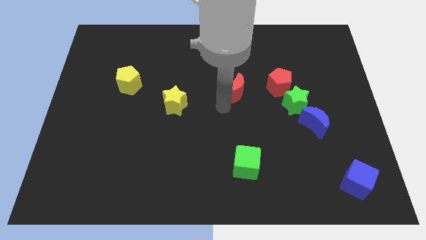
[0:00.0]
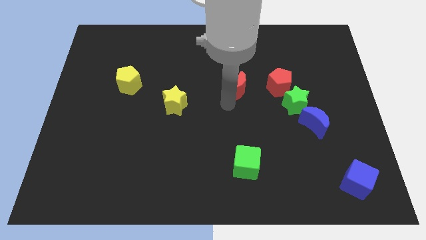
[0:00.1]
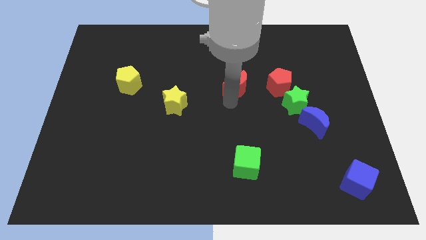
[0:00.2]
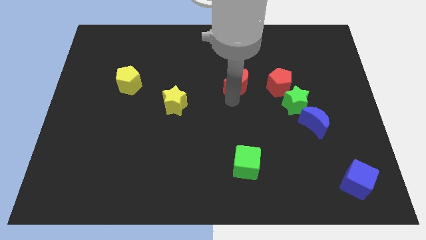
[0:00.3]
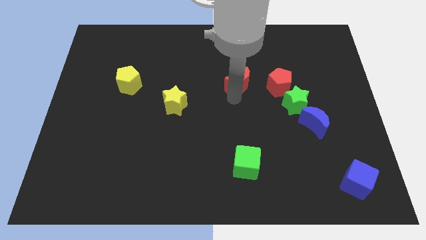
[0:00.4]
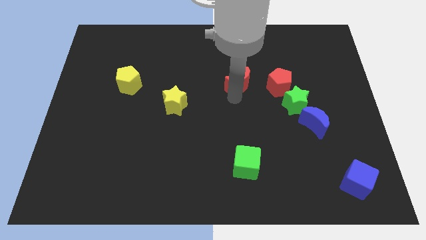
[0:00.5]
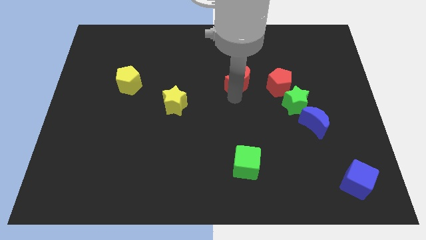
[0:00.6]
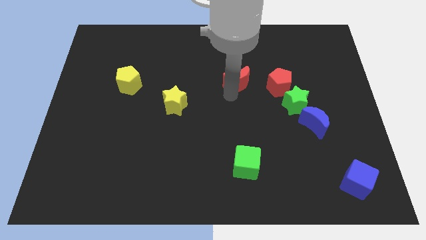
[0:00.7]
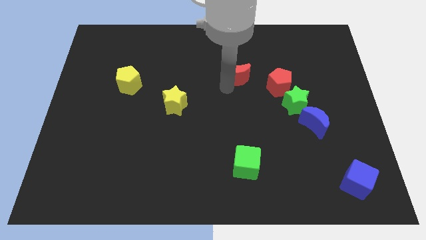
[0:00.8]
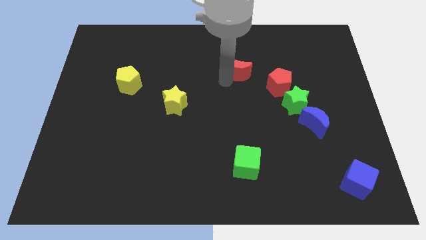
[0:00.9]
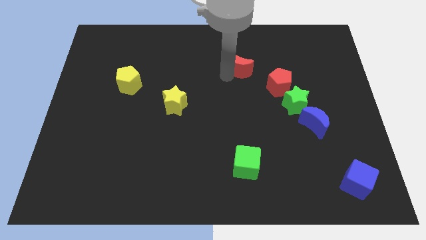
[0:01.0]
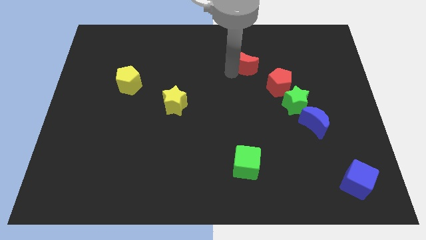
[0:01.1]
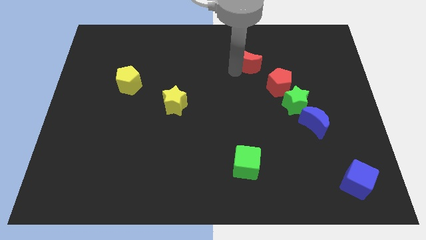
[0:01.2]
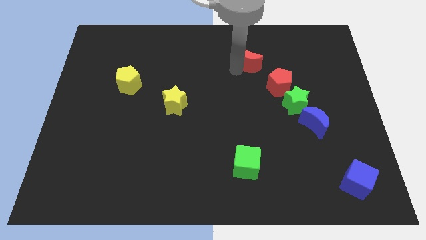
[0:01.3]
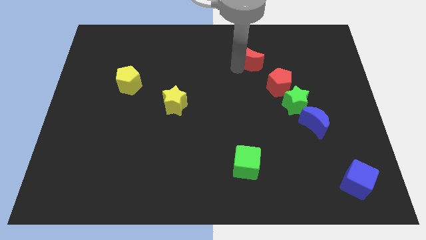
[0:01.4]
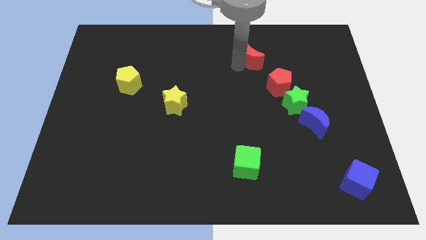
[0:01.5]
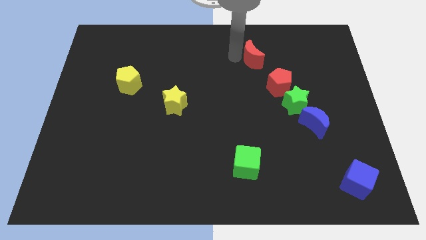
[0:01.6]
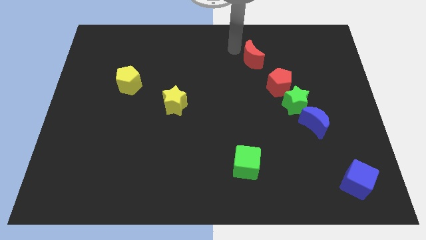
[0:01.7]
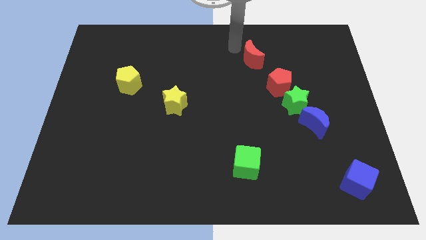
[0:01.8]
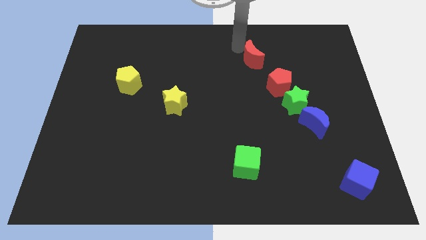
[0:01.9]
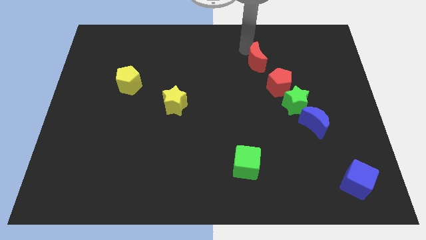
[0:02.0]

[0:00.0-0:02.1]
move red moon diagonally above the red pentagon

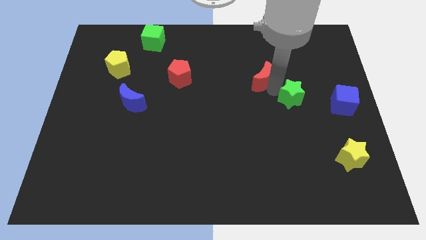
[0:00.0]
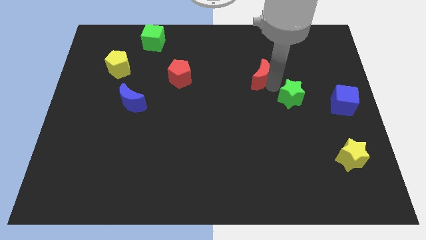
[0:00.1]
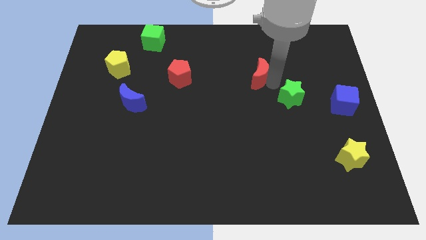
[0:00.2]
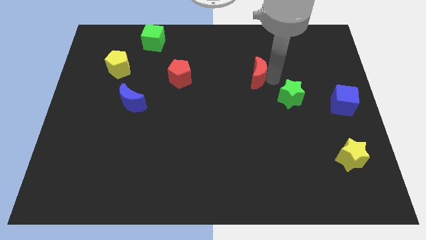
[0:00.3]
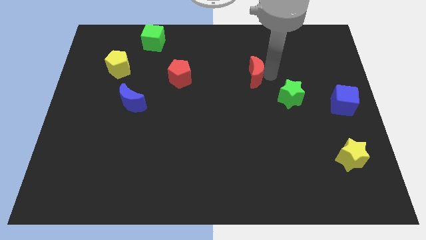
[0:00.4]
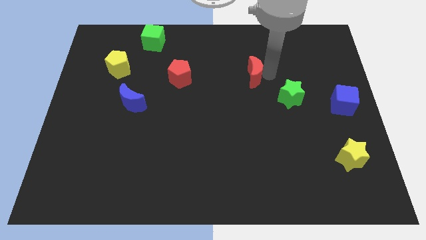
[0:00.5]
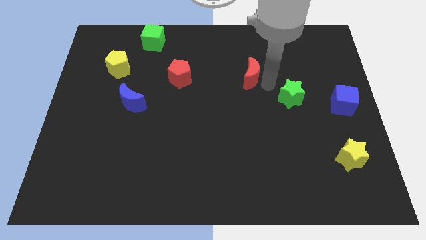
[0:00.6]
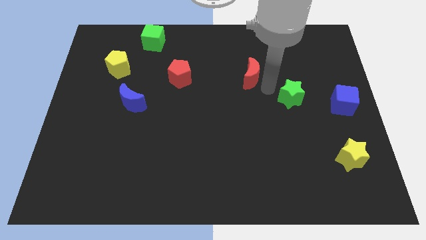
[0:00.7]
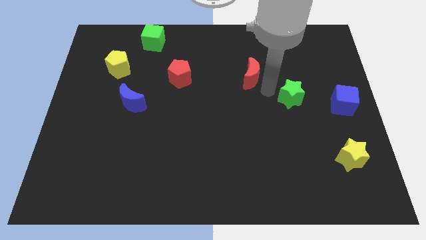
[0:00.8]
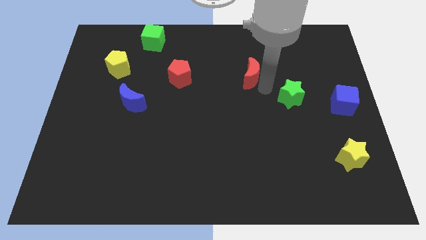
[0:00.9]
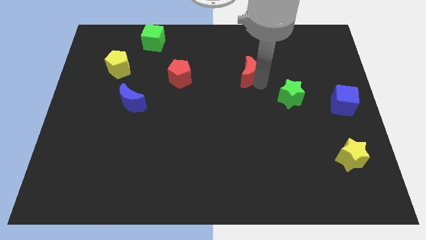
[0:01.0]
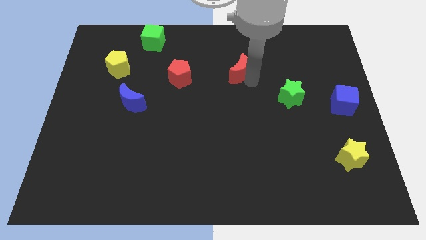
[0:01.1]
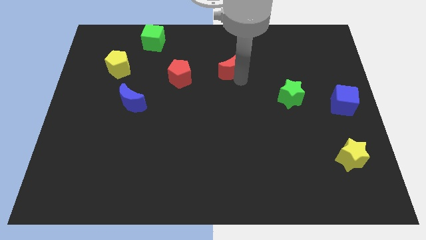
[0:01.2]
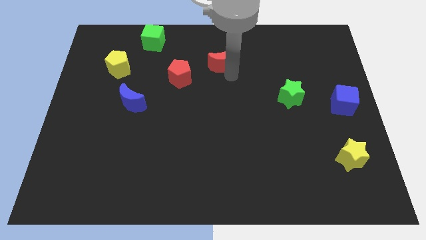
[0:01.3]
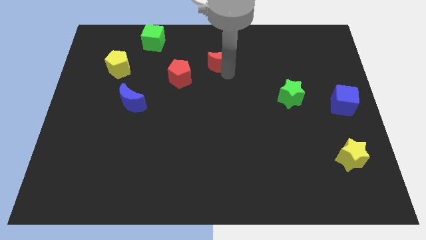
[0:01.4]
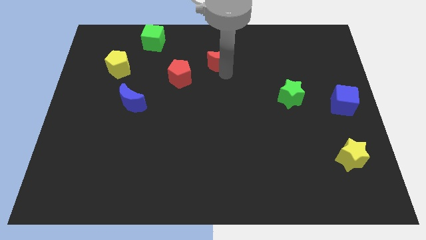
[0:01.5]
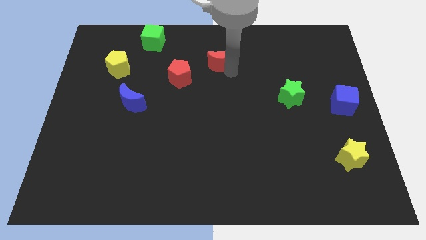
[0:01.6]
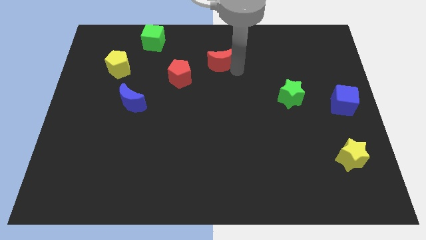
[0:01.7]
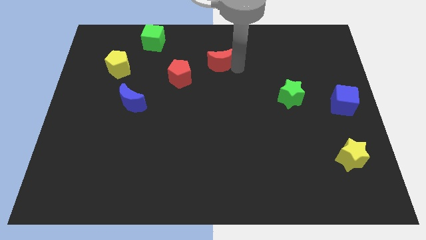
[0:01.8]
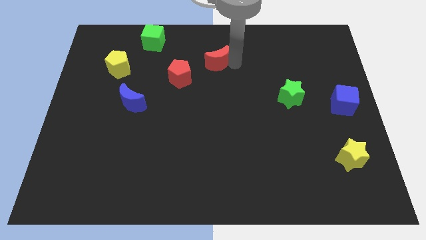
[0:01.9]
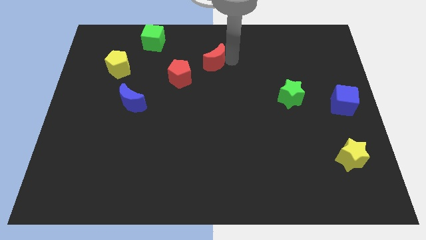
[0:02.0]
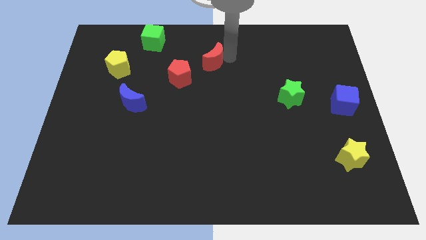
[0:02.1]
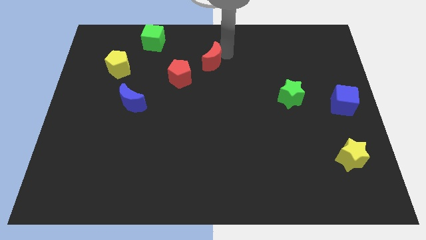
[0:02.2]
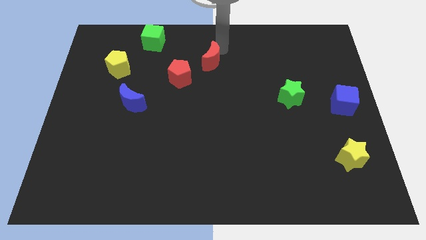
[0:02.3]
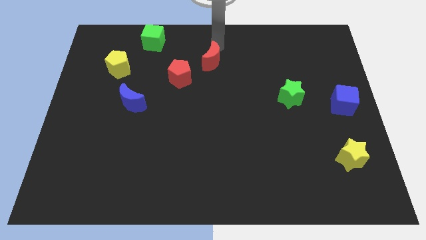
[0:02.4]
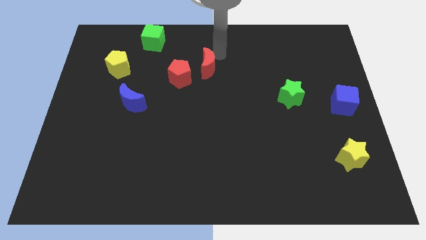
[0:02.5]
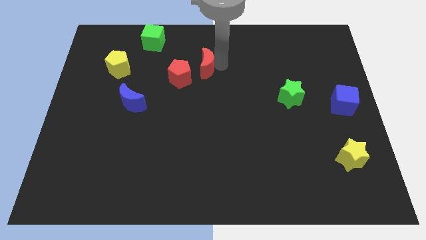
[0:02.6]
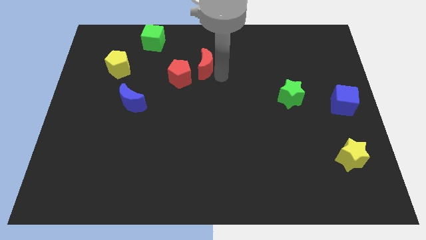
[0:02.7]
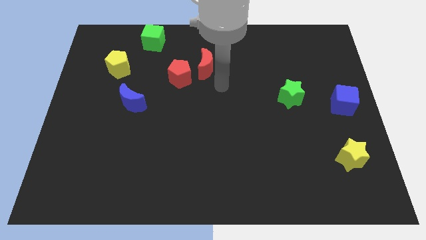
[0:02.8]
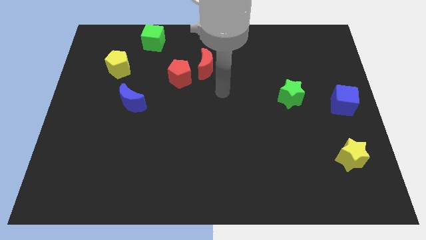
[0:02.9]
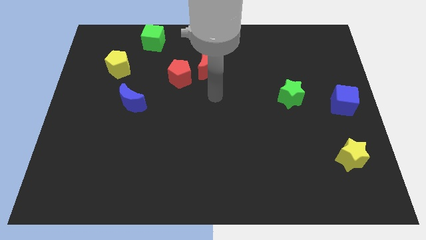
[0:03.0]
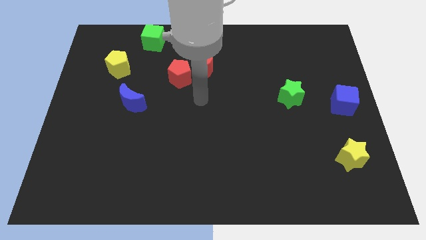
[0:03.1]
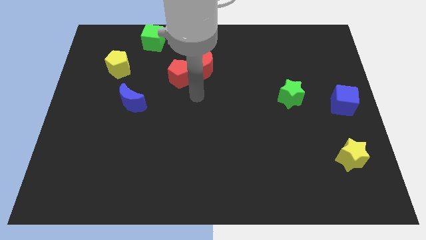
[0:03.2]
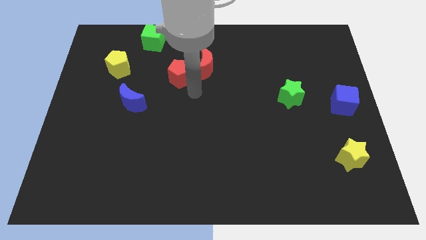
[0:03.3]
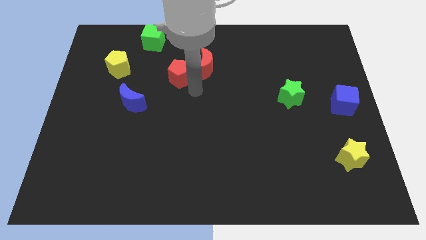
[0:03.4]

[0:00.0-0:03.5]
move the red crescent close to the red pentagon

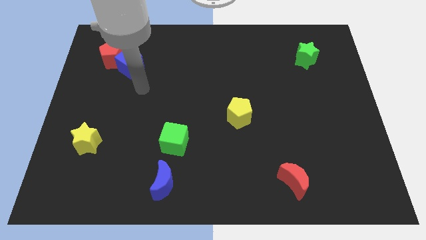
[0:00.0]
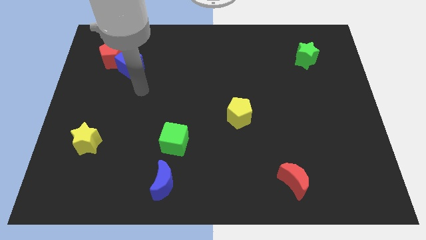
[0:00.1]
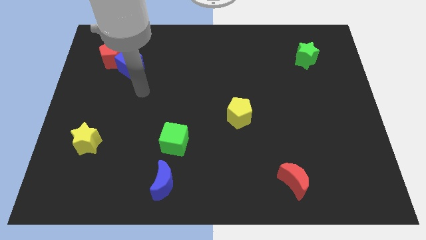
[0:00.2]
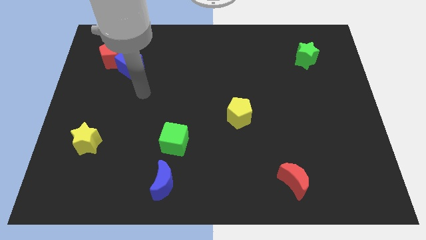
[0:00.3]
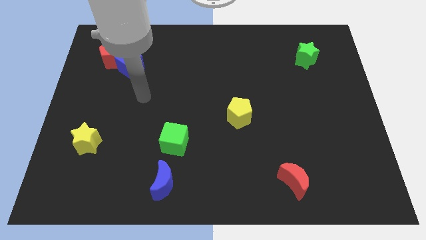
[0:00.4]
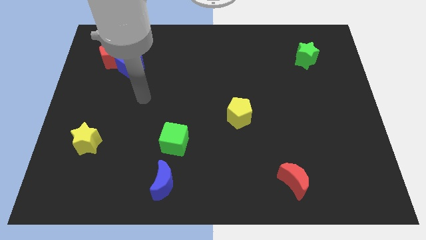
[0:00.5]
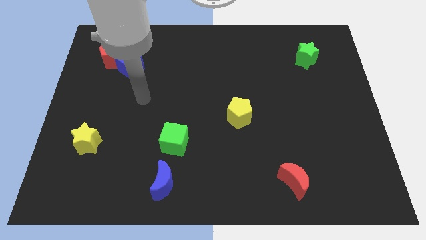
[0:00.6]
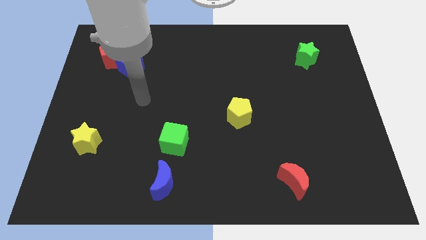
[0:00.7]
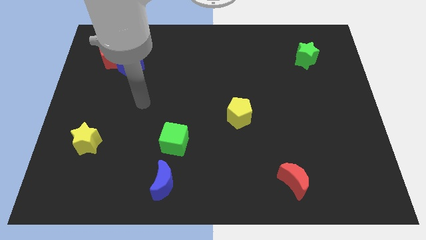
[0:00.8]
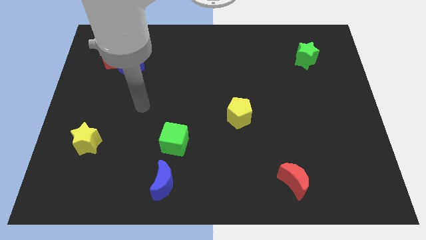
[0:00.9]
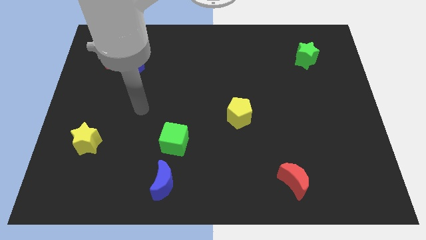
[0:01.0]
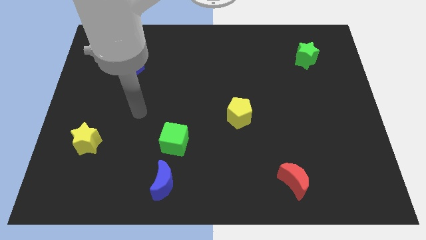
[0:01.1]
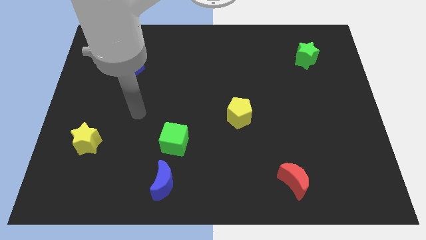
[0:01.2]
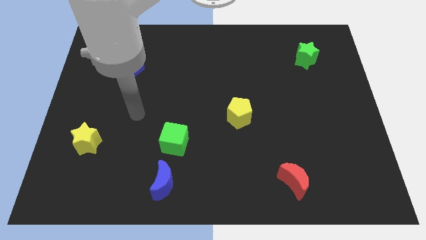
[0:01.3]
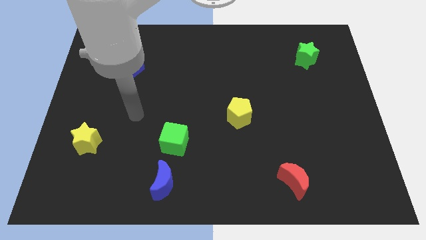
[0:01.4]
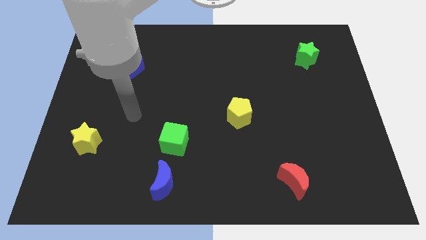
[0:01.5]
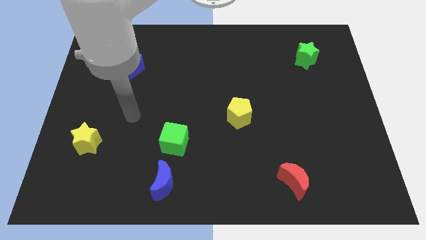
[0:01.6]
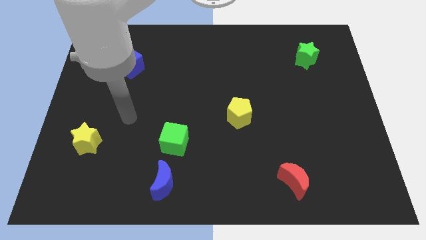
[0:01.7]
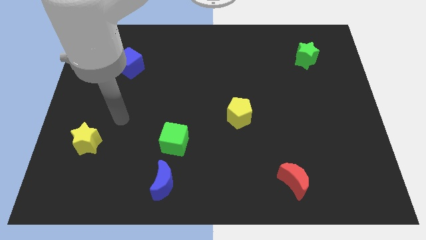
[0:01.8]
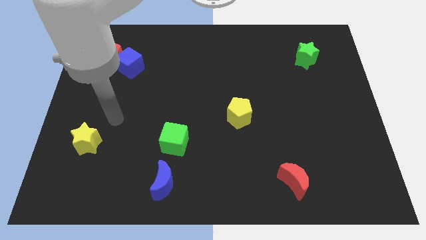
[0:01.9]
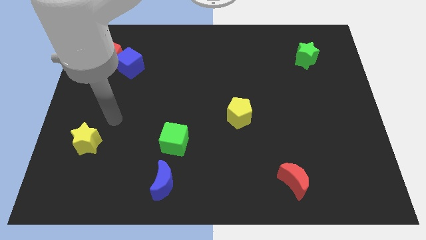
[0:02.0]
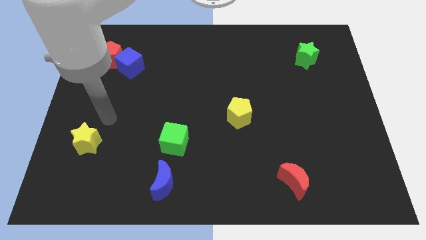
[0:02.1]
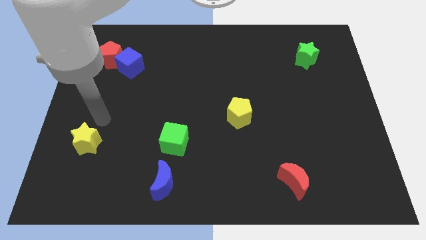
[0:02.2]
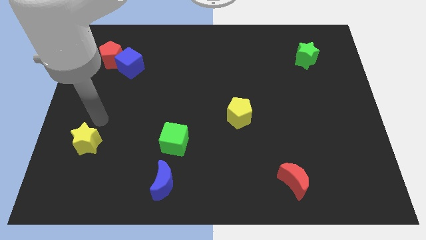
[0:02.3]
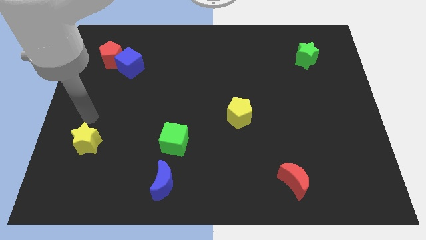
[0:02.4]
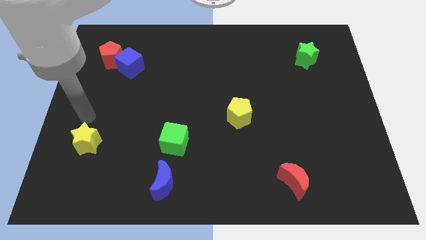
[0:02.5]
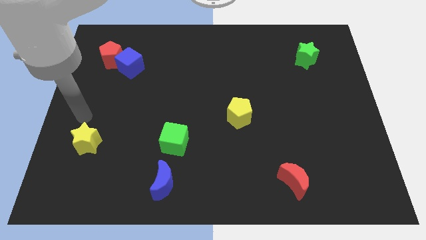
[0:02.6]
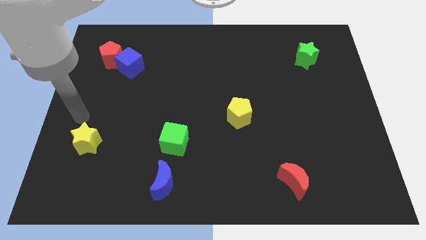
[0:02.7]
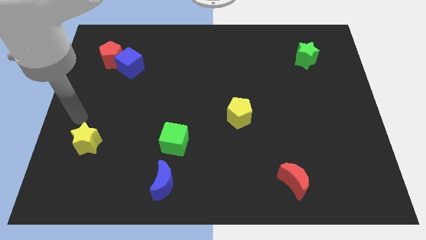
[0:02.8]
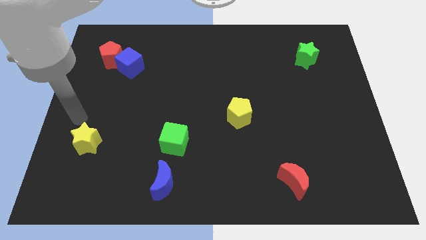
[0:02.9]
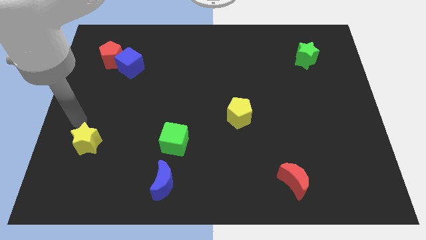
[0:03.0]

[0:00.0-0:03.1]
move your arm away from the blue cube
